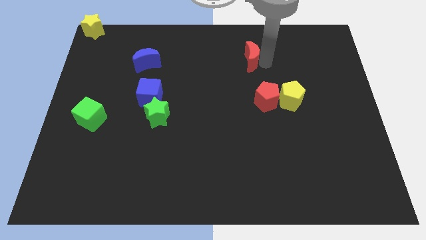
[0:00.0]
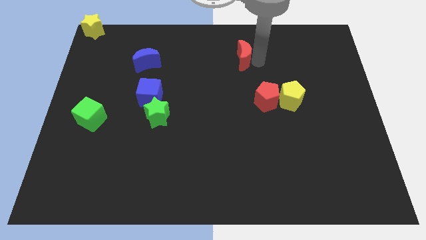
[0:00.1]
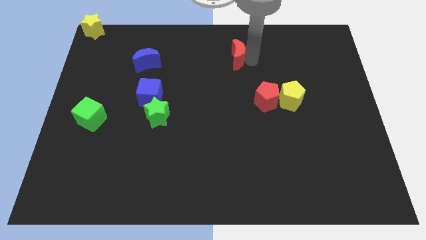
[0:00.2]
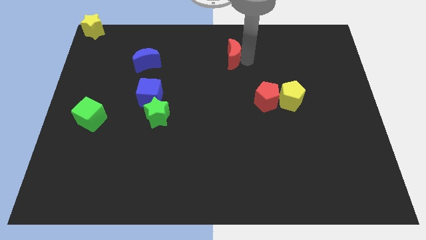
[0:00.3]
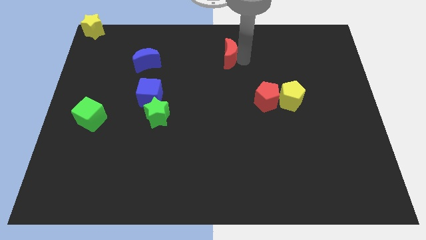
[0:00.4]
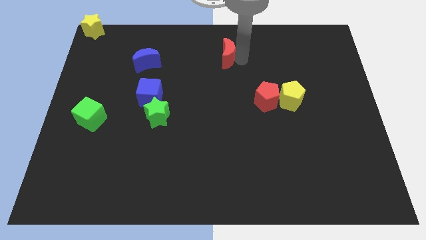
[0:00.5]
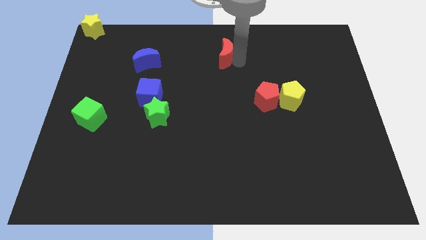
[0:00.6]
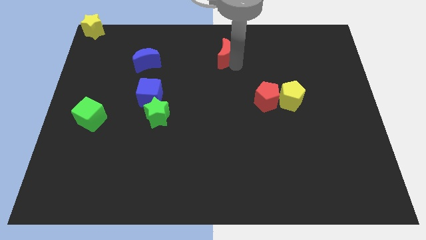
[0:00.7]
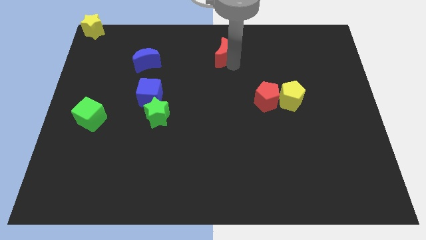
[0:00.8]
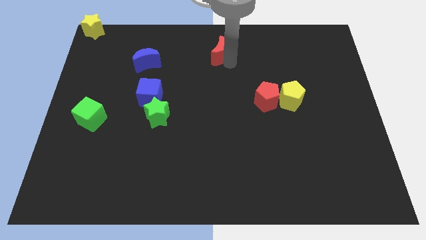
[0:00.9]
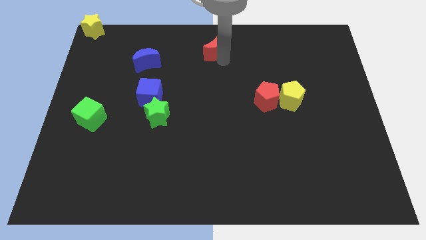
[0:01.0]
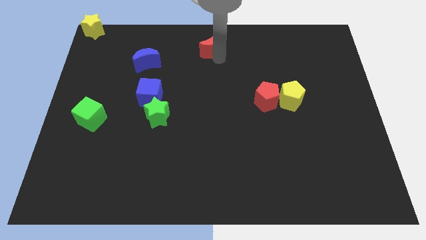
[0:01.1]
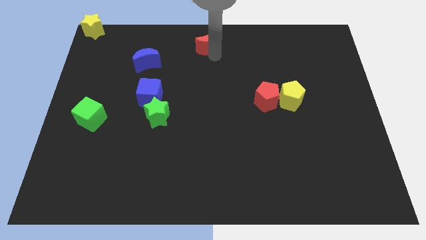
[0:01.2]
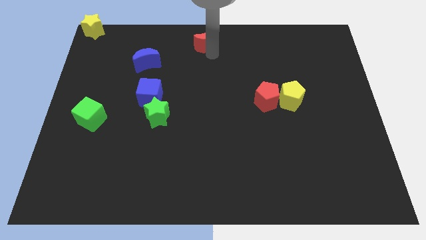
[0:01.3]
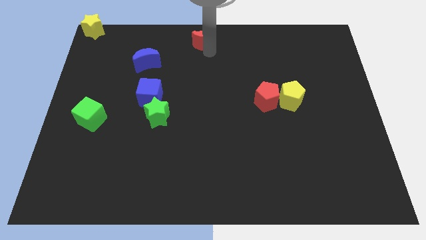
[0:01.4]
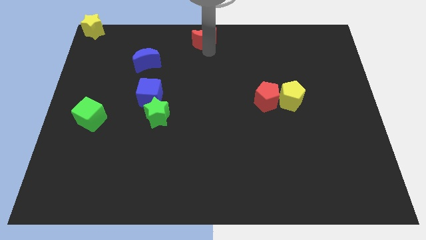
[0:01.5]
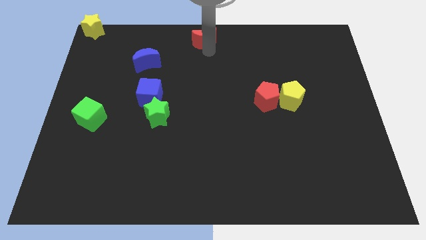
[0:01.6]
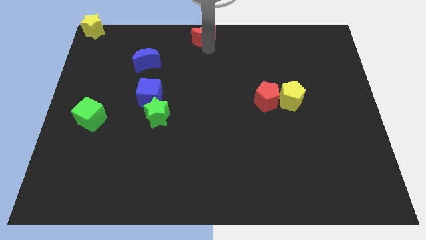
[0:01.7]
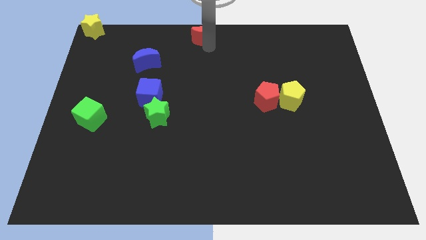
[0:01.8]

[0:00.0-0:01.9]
move the red moon to the top center

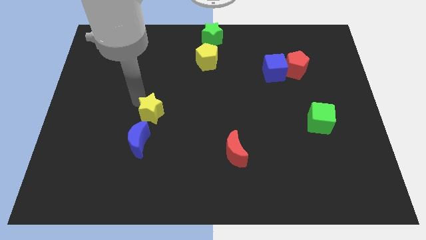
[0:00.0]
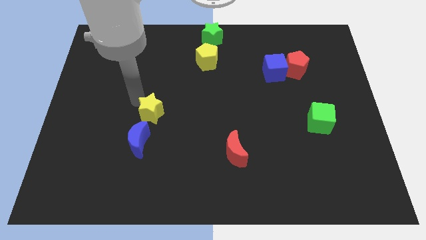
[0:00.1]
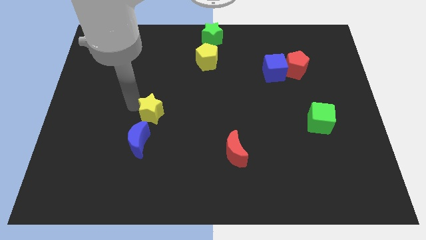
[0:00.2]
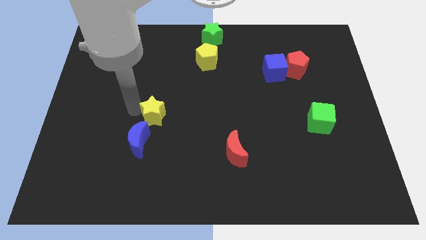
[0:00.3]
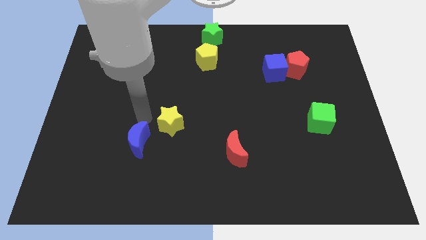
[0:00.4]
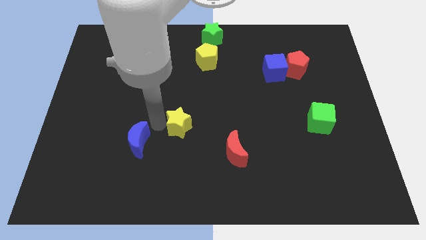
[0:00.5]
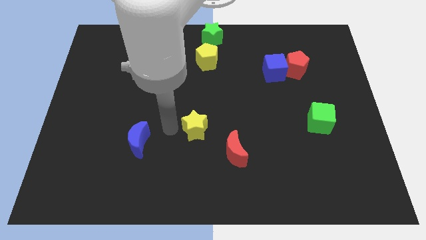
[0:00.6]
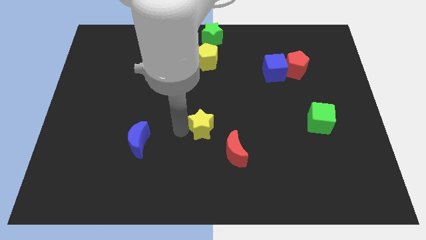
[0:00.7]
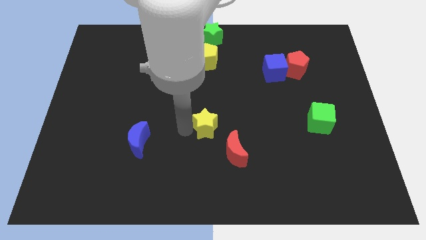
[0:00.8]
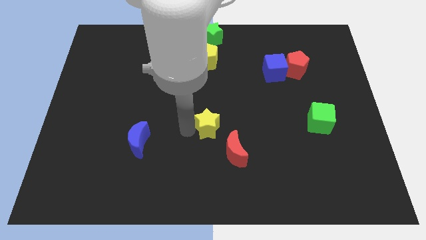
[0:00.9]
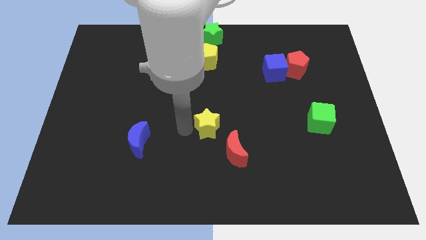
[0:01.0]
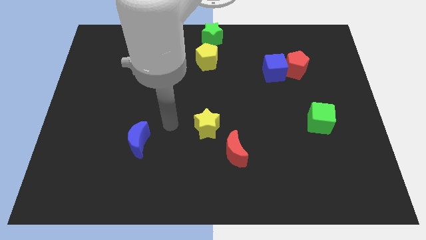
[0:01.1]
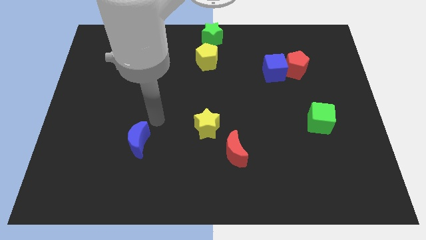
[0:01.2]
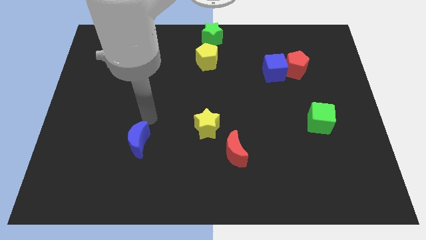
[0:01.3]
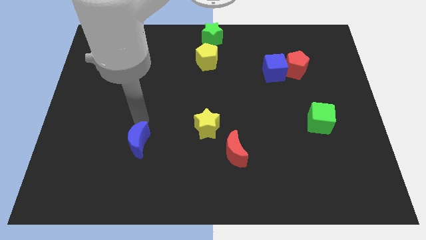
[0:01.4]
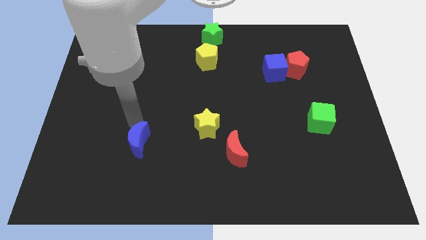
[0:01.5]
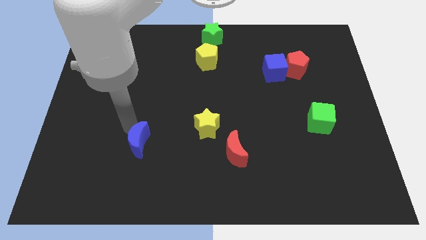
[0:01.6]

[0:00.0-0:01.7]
push the yellow star to the top left corner of the red crescent

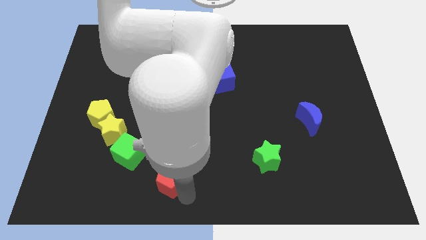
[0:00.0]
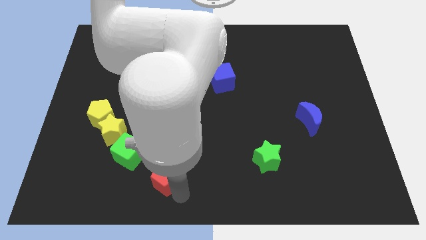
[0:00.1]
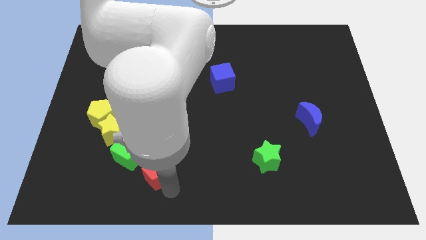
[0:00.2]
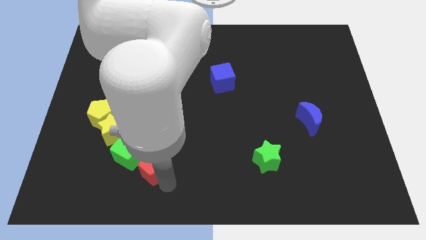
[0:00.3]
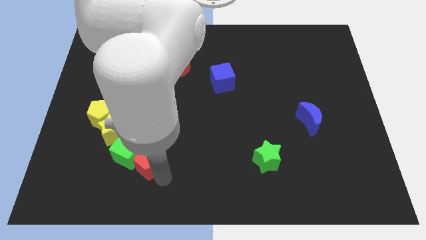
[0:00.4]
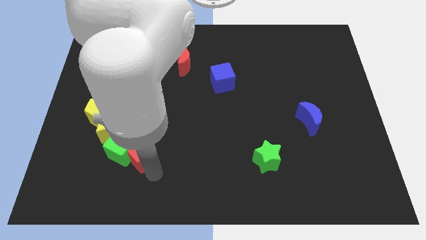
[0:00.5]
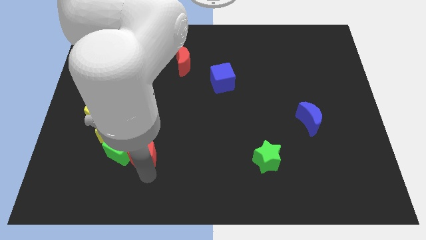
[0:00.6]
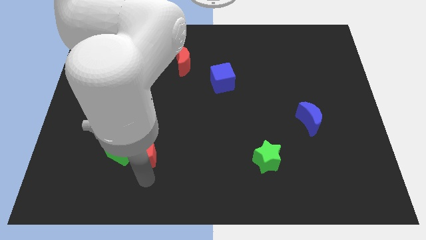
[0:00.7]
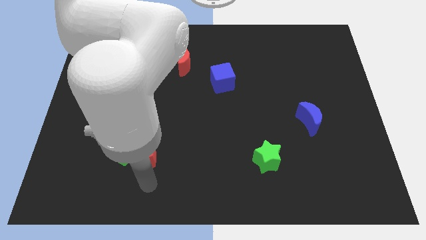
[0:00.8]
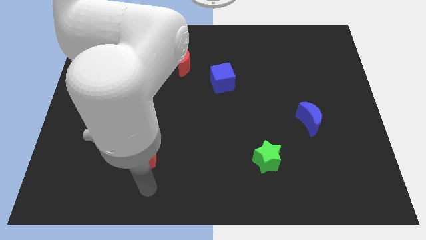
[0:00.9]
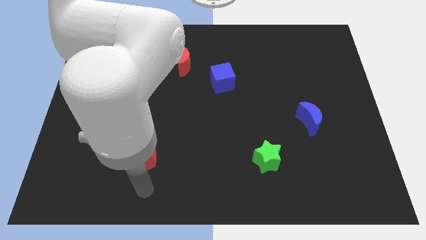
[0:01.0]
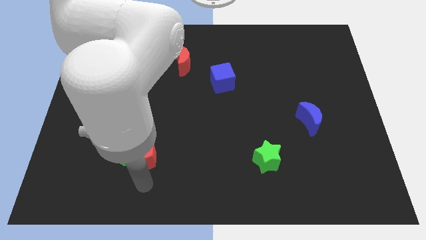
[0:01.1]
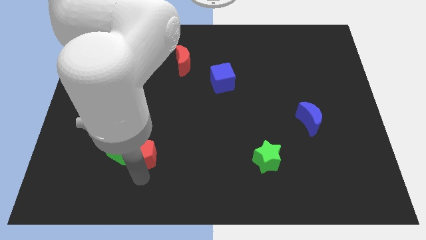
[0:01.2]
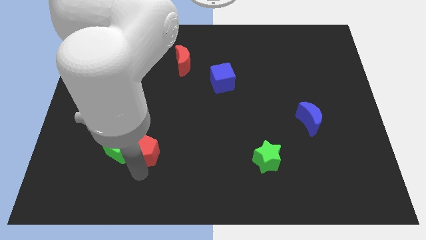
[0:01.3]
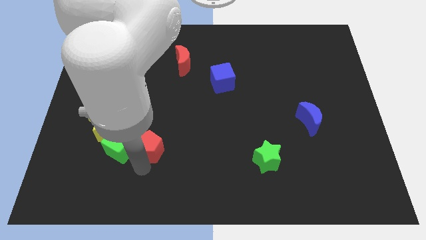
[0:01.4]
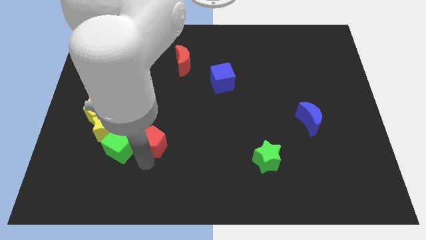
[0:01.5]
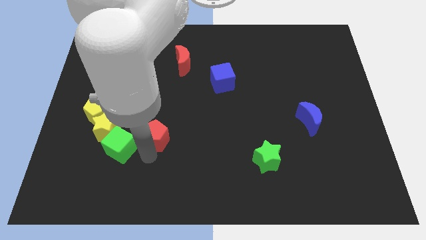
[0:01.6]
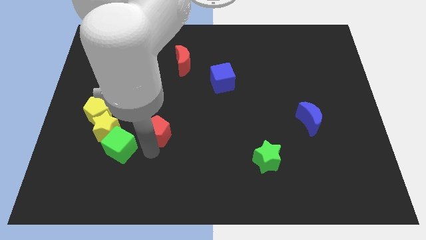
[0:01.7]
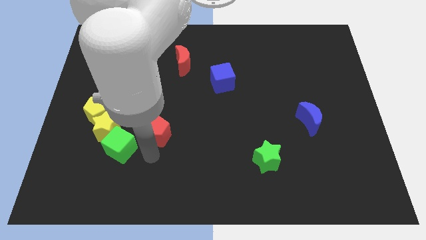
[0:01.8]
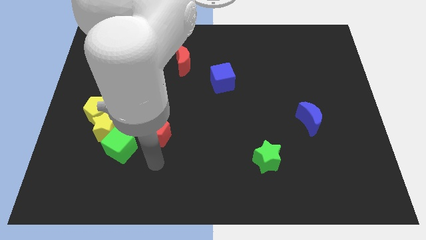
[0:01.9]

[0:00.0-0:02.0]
push the red pentagon towards the green cube

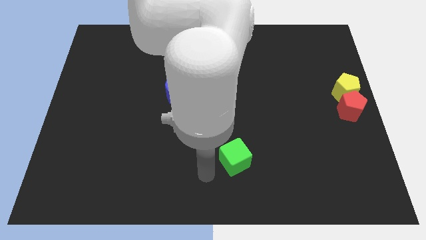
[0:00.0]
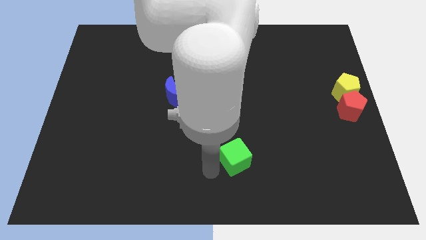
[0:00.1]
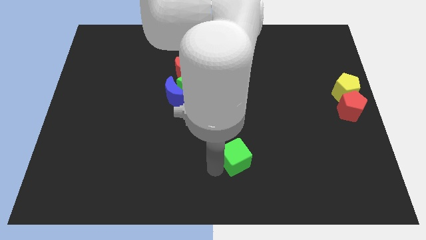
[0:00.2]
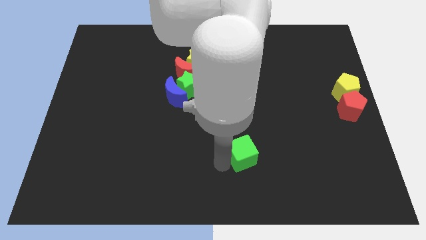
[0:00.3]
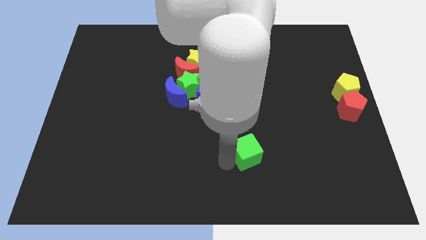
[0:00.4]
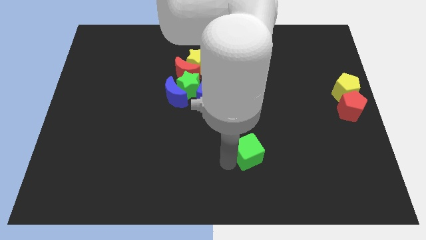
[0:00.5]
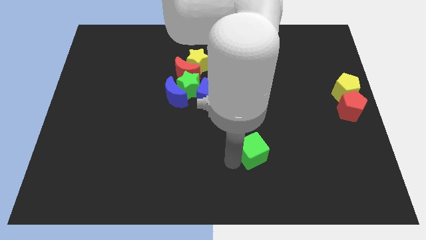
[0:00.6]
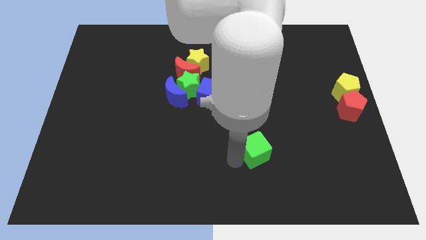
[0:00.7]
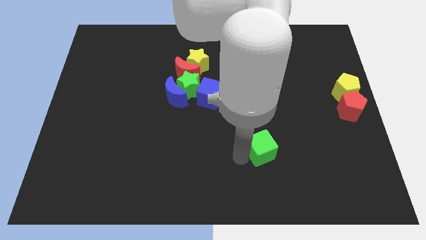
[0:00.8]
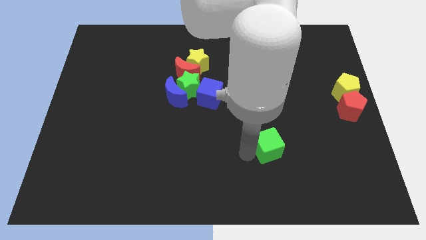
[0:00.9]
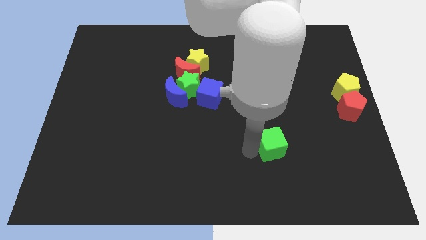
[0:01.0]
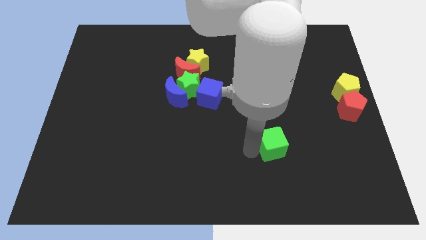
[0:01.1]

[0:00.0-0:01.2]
push the green cube to the bottom center

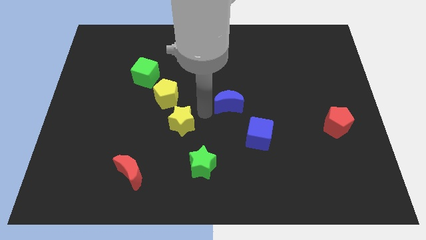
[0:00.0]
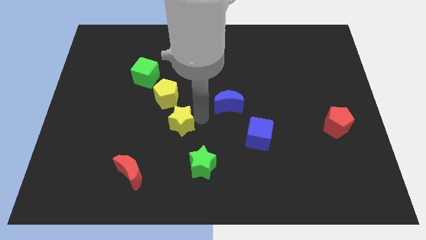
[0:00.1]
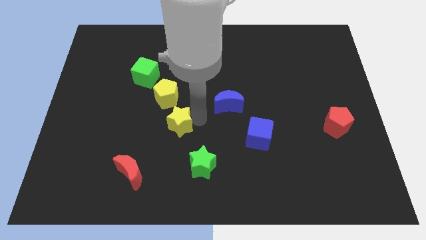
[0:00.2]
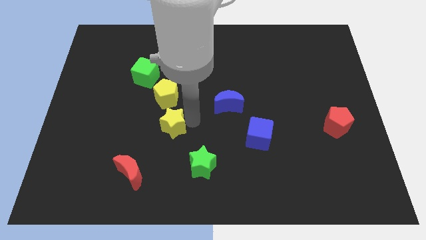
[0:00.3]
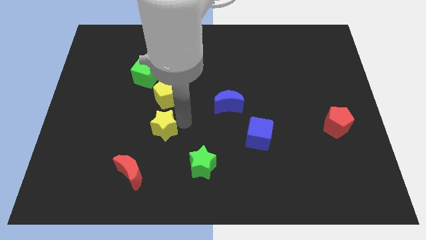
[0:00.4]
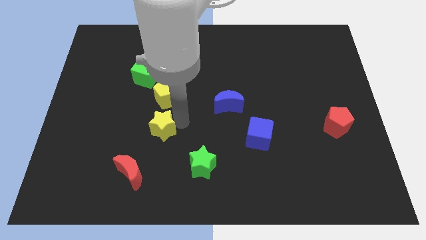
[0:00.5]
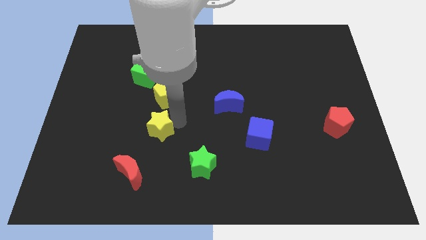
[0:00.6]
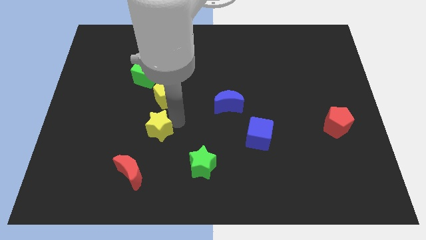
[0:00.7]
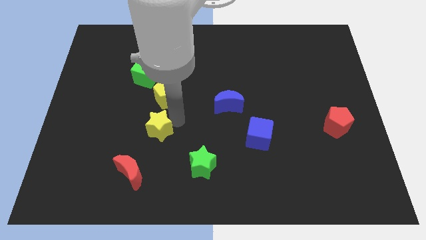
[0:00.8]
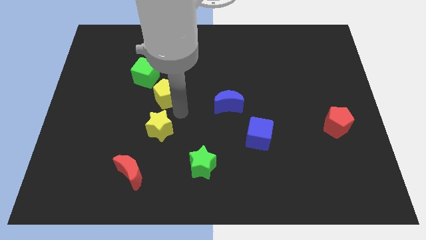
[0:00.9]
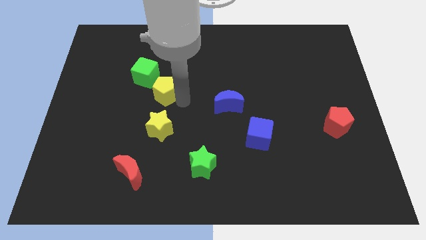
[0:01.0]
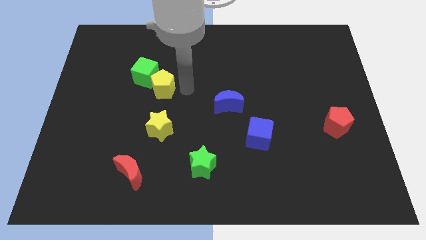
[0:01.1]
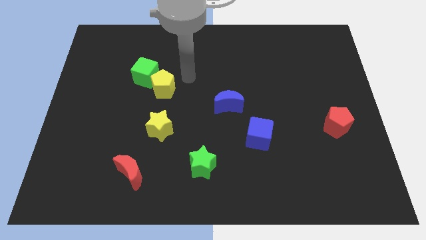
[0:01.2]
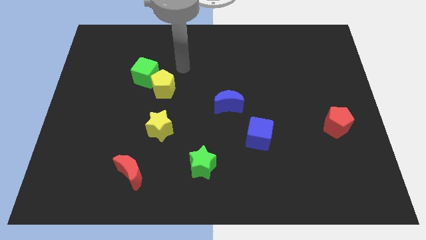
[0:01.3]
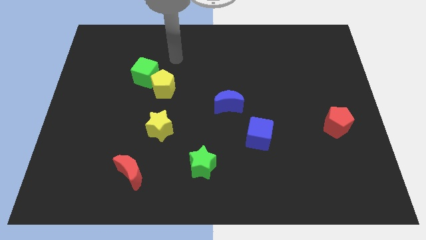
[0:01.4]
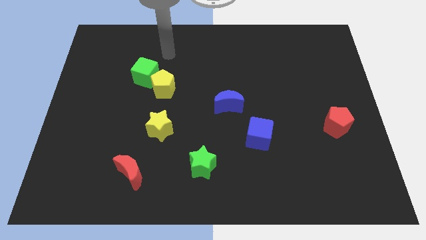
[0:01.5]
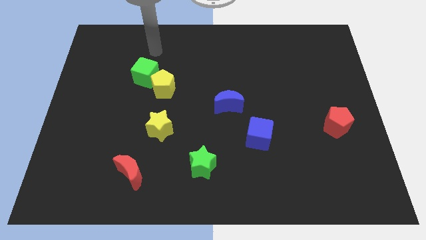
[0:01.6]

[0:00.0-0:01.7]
push the yellow star towards the left side of the board

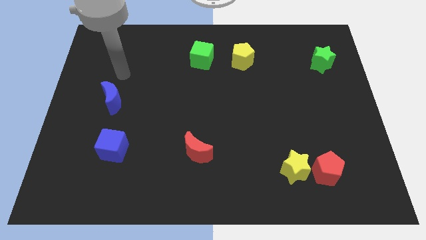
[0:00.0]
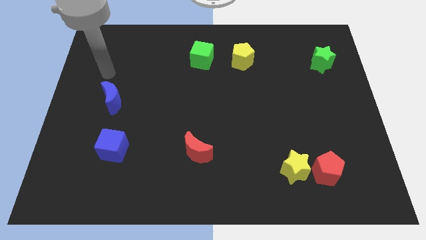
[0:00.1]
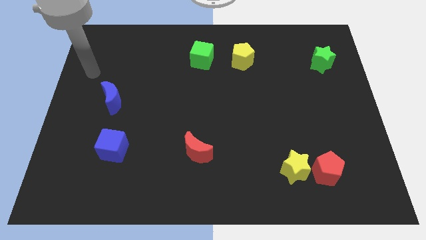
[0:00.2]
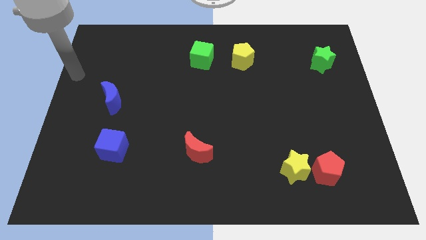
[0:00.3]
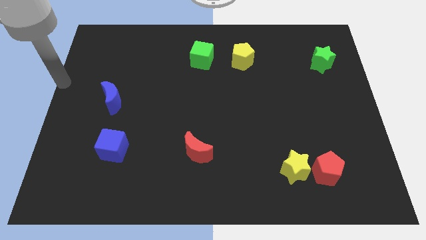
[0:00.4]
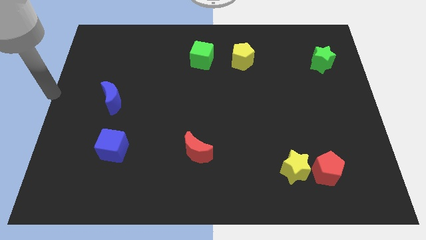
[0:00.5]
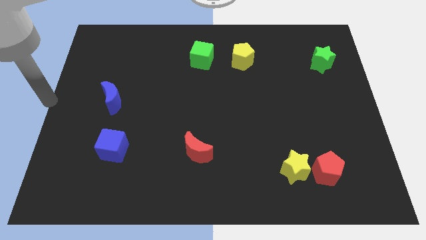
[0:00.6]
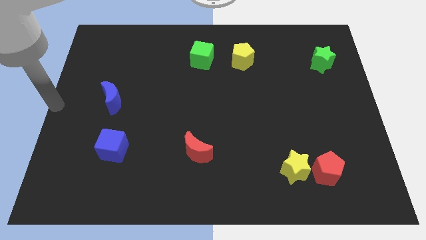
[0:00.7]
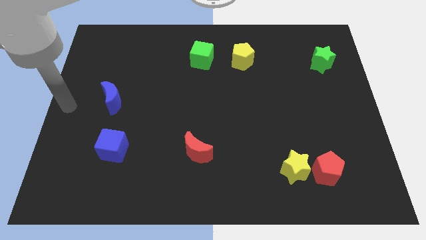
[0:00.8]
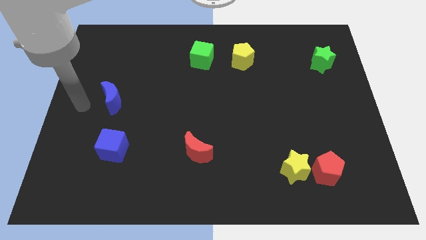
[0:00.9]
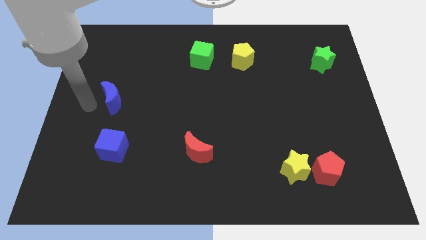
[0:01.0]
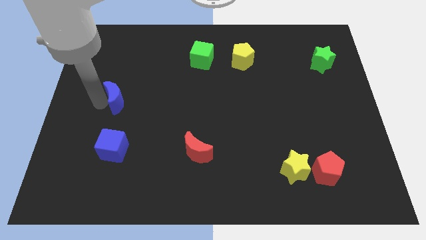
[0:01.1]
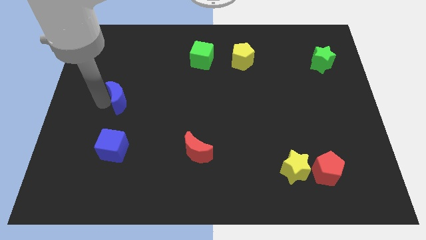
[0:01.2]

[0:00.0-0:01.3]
tap the blue crescent
